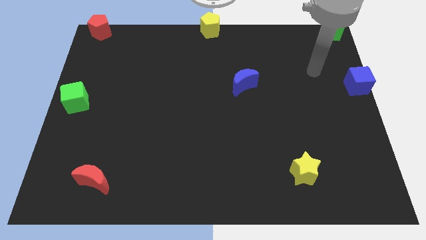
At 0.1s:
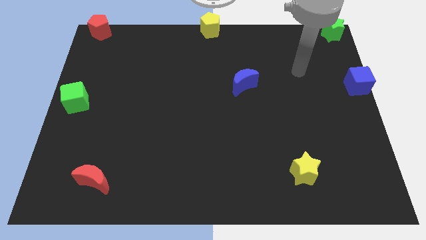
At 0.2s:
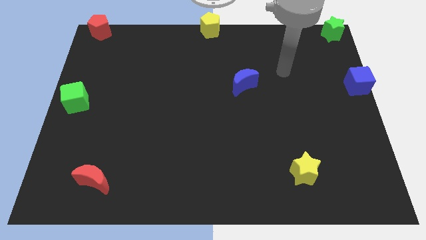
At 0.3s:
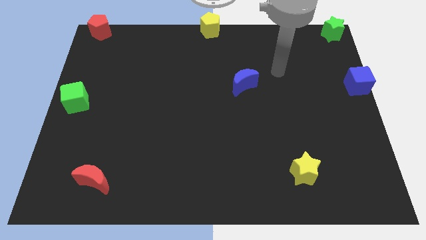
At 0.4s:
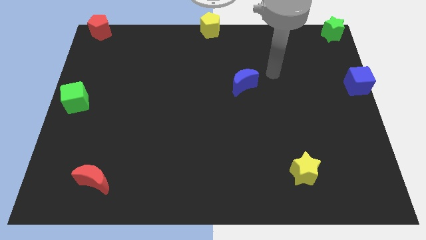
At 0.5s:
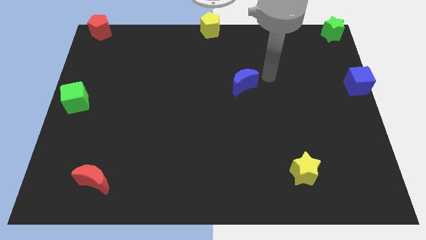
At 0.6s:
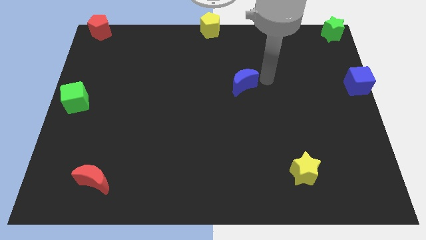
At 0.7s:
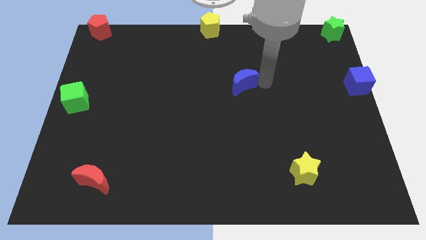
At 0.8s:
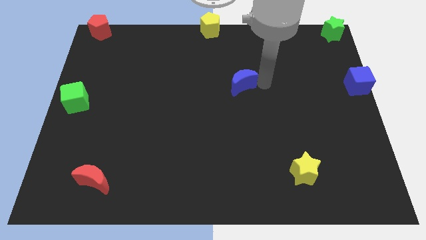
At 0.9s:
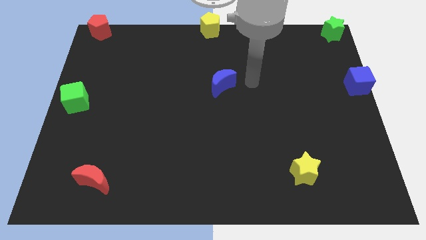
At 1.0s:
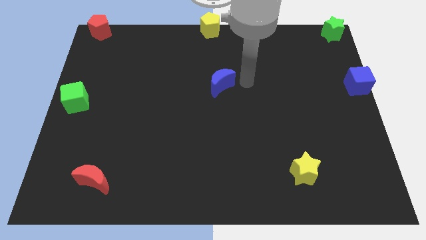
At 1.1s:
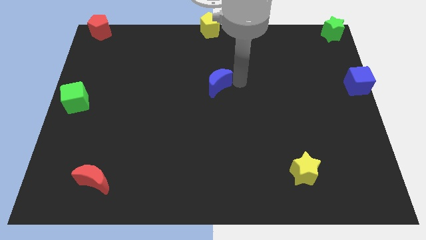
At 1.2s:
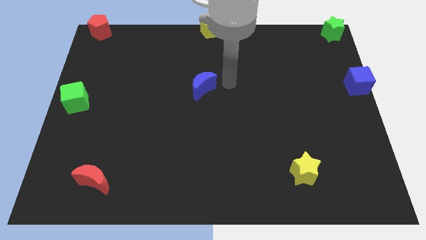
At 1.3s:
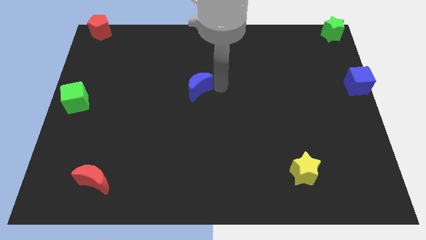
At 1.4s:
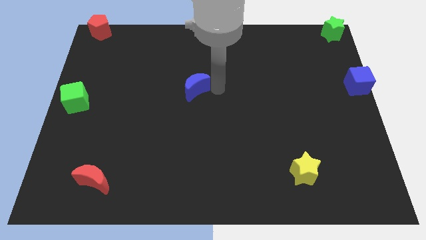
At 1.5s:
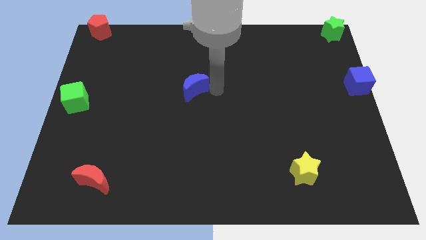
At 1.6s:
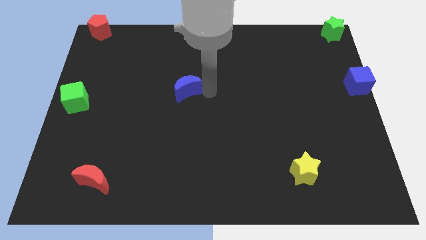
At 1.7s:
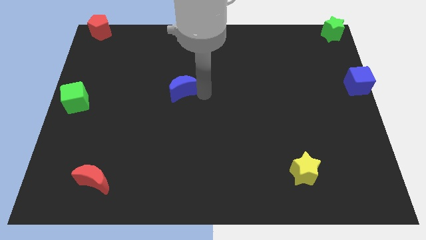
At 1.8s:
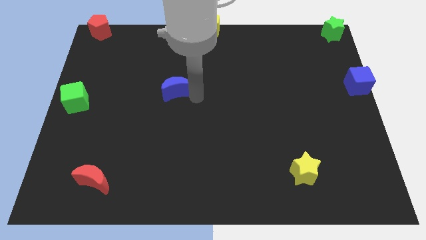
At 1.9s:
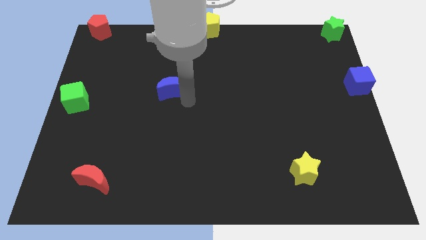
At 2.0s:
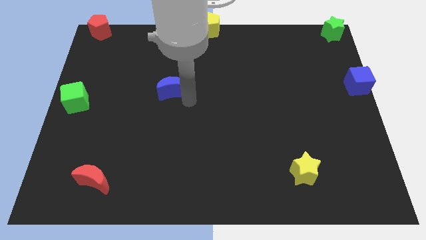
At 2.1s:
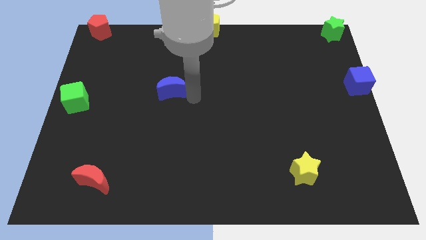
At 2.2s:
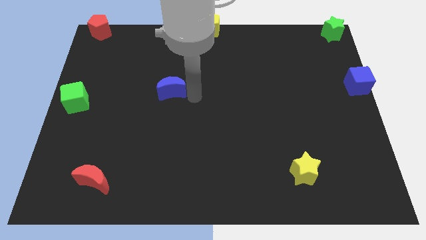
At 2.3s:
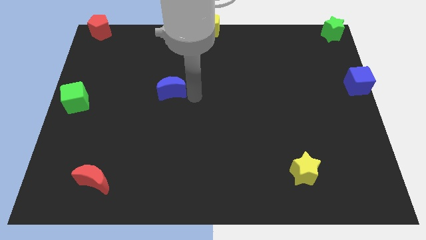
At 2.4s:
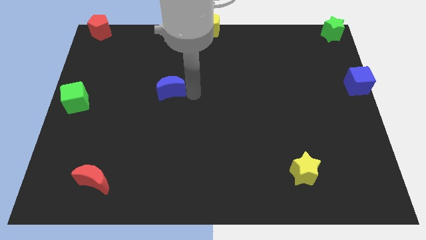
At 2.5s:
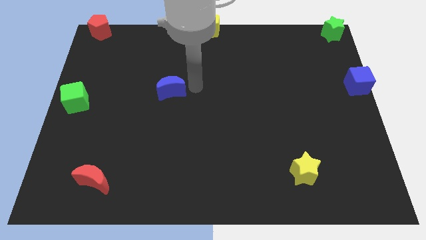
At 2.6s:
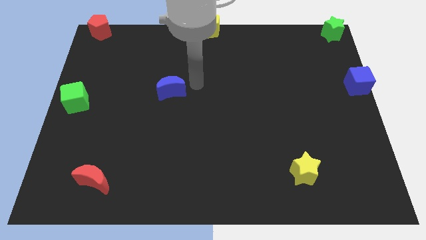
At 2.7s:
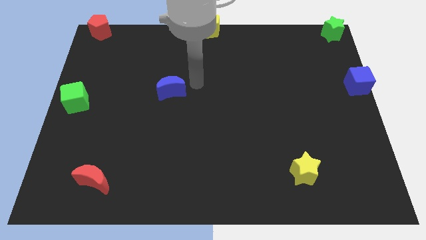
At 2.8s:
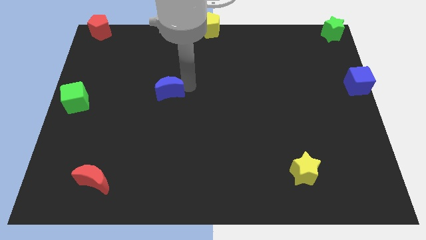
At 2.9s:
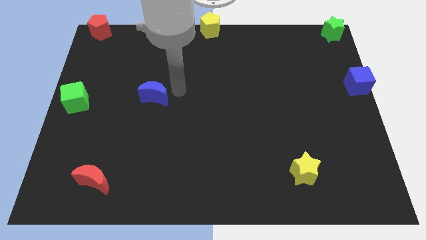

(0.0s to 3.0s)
push the blue crescent towards the left center of the board

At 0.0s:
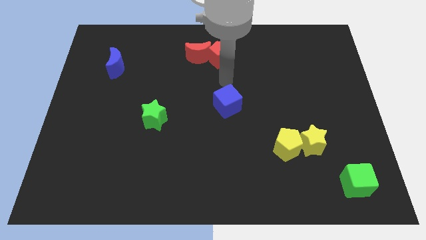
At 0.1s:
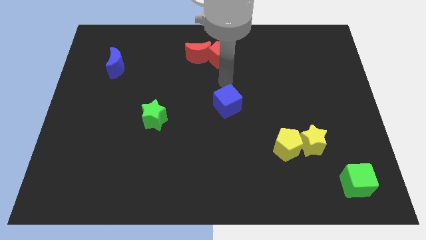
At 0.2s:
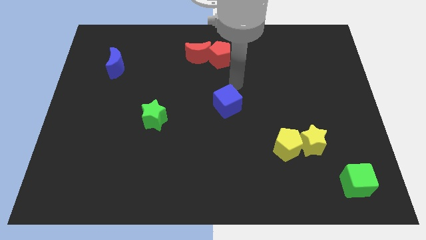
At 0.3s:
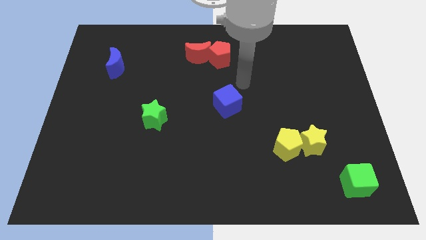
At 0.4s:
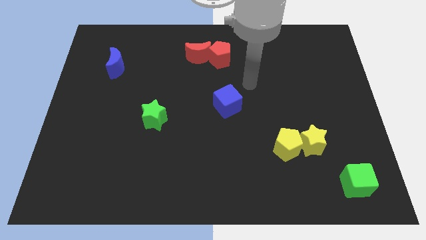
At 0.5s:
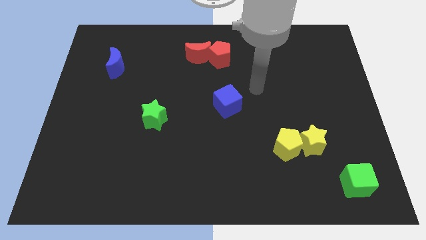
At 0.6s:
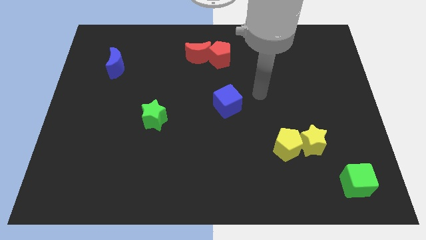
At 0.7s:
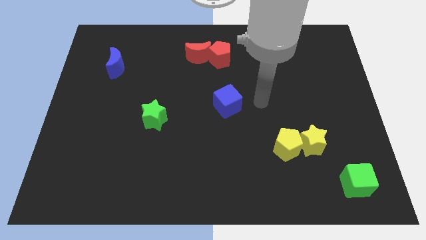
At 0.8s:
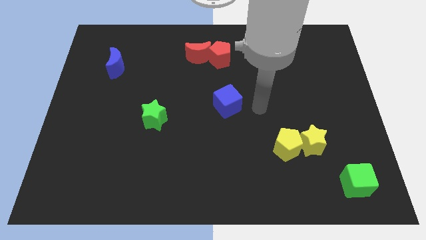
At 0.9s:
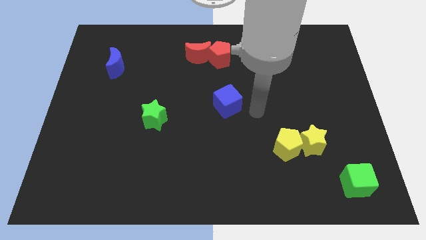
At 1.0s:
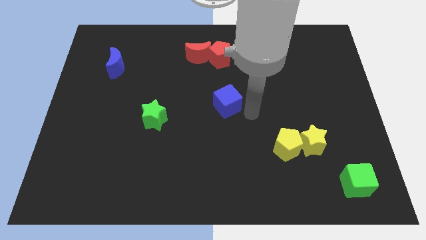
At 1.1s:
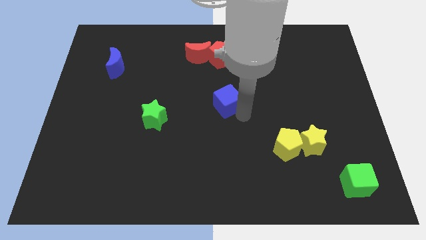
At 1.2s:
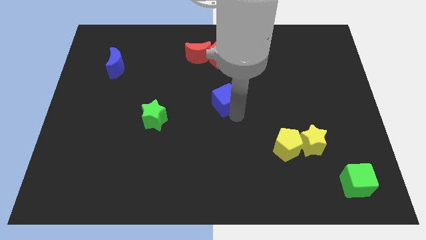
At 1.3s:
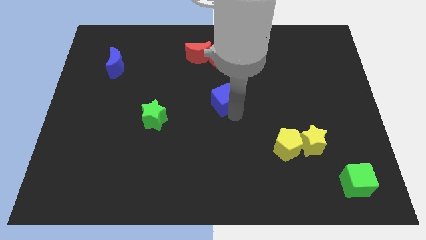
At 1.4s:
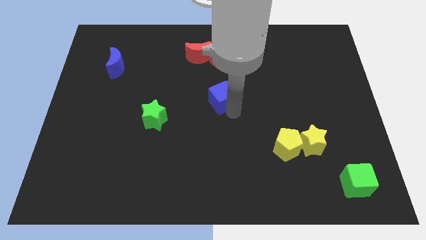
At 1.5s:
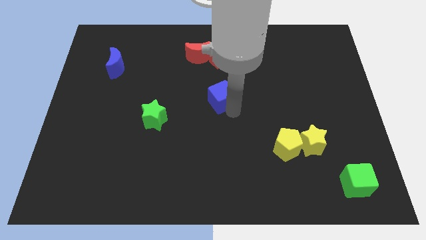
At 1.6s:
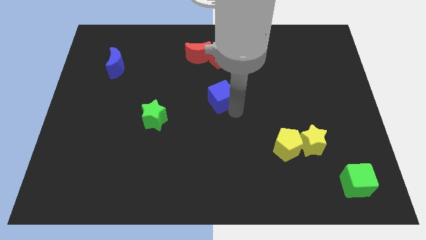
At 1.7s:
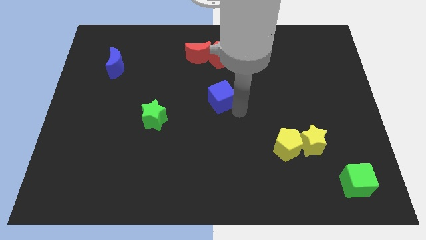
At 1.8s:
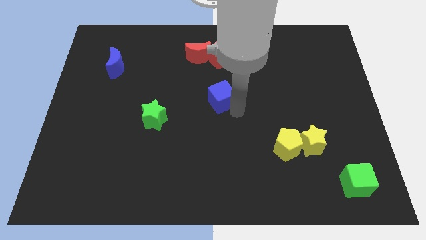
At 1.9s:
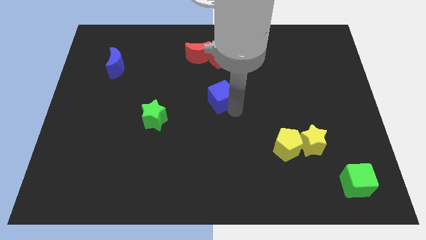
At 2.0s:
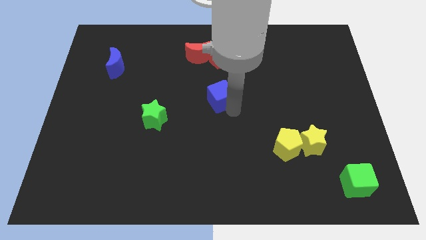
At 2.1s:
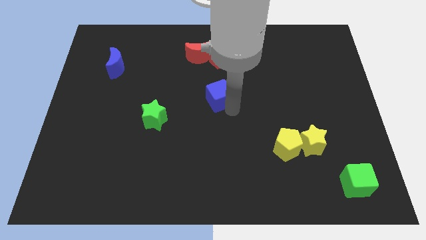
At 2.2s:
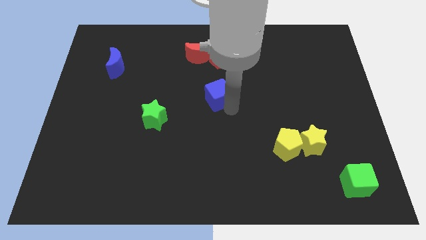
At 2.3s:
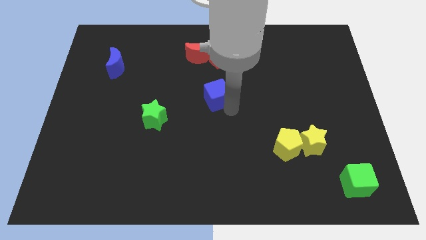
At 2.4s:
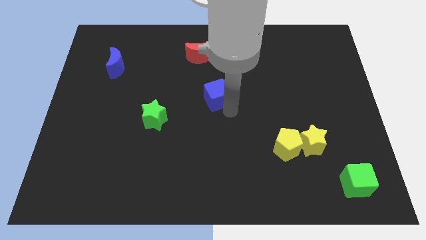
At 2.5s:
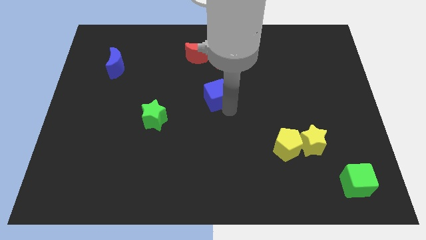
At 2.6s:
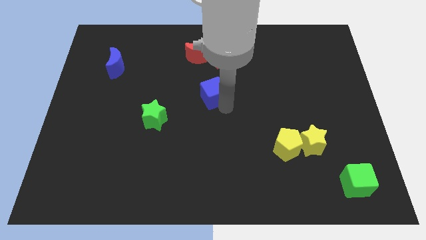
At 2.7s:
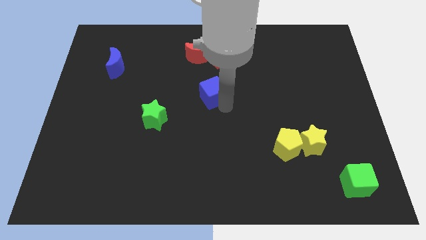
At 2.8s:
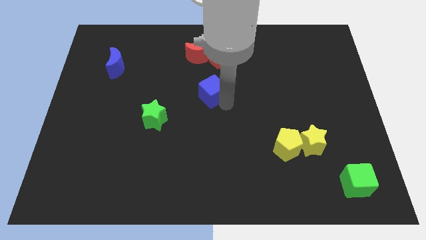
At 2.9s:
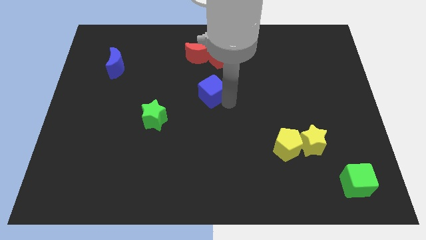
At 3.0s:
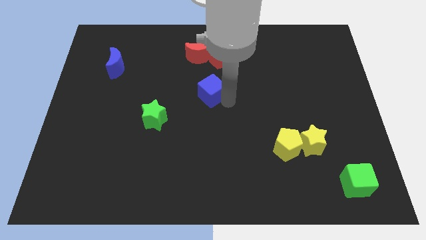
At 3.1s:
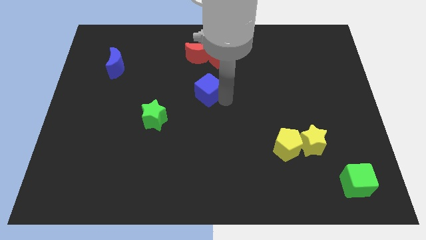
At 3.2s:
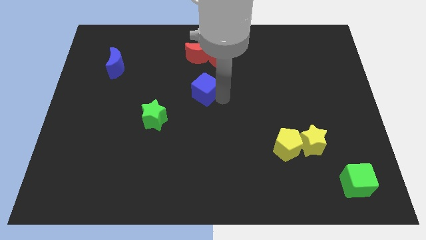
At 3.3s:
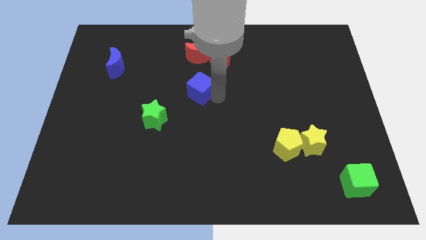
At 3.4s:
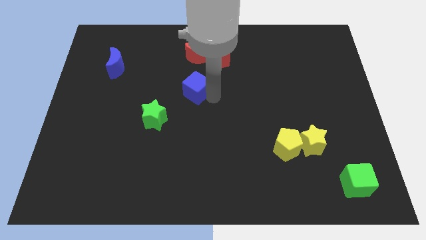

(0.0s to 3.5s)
place blue cube below the red blocks

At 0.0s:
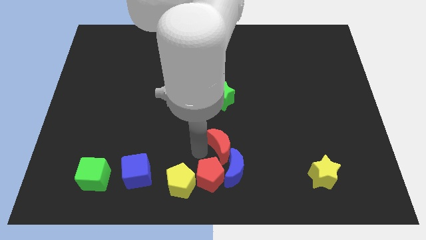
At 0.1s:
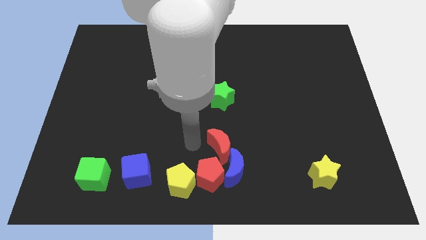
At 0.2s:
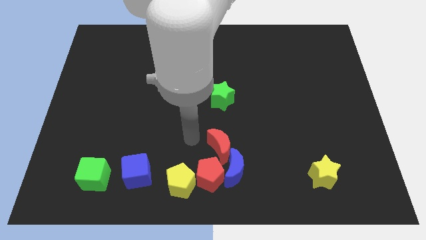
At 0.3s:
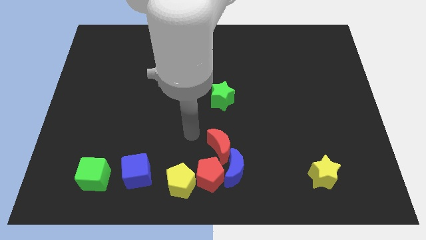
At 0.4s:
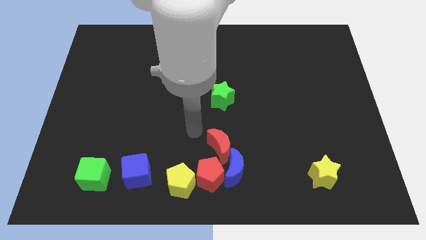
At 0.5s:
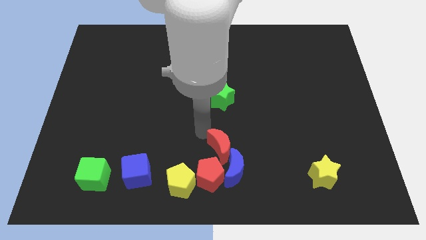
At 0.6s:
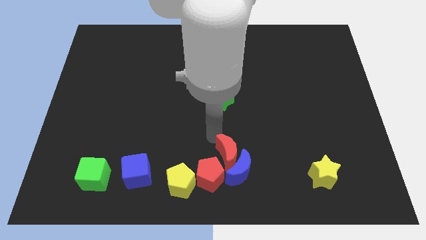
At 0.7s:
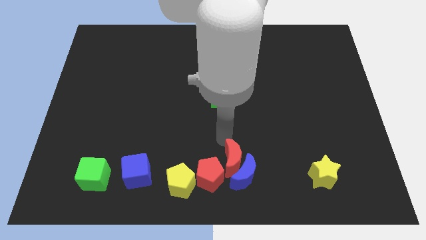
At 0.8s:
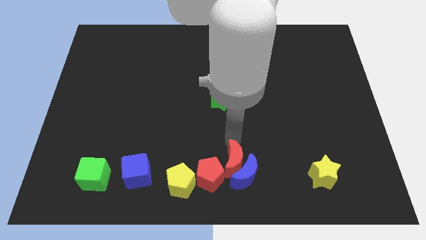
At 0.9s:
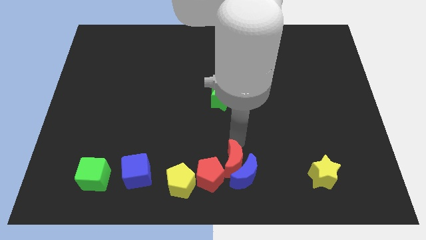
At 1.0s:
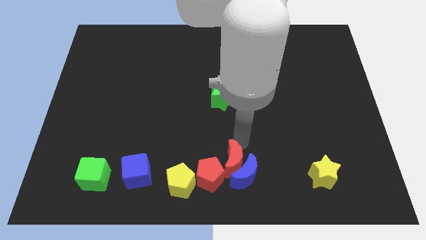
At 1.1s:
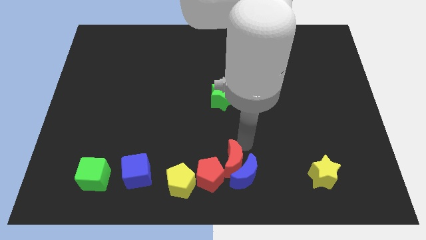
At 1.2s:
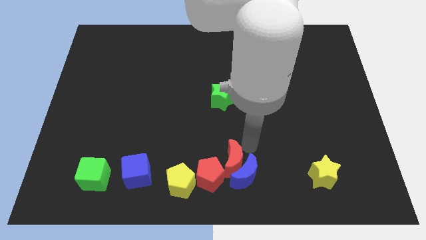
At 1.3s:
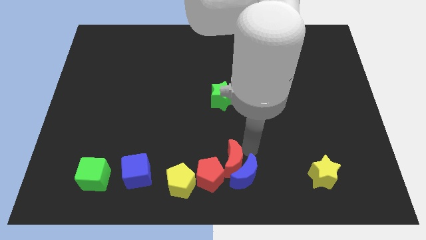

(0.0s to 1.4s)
tap at the top side of the red crescent

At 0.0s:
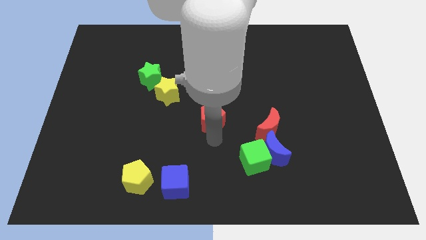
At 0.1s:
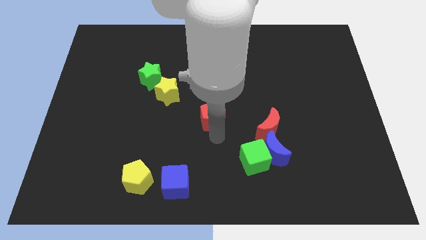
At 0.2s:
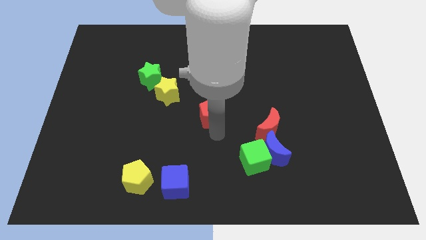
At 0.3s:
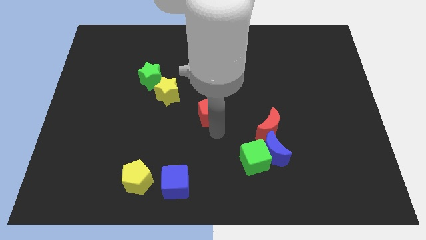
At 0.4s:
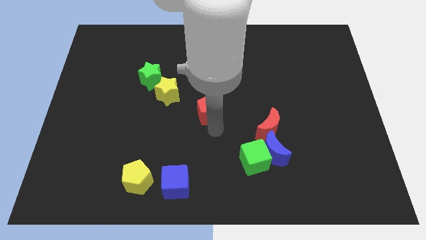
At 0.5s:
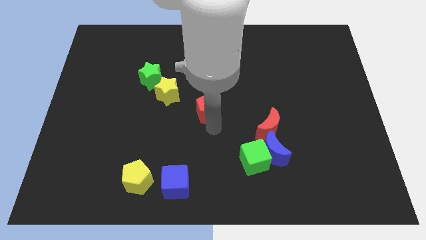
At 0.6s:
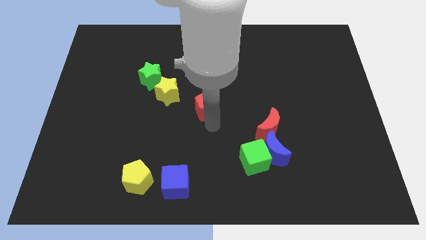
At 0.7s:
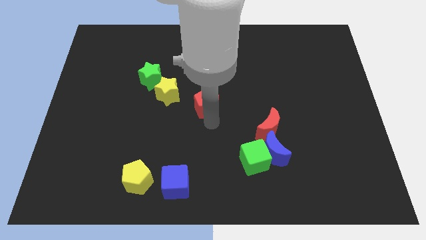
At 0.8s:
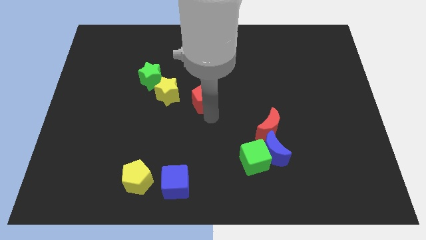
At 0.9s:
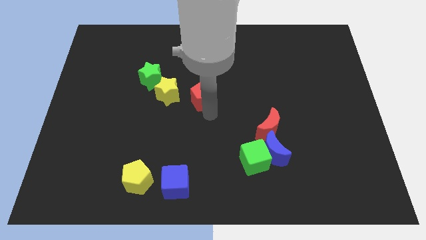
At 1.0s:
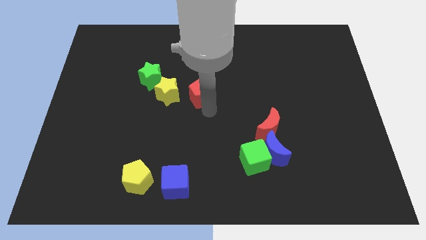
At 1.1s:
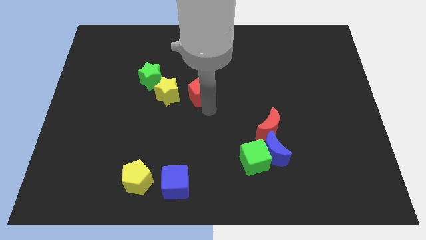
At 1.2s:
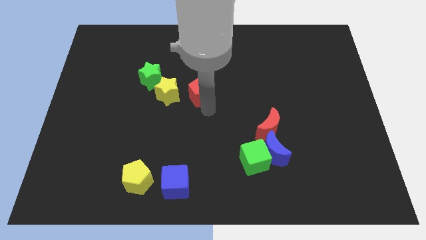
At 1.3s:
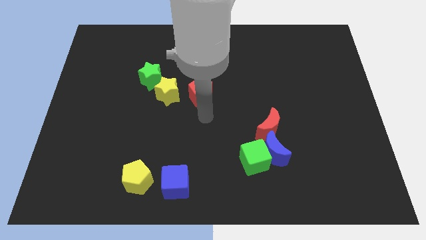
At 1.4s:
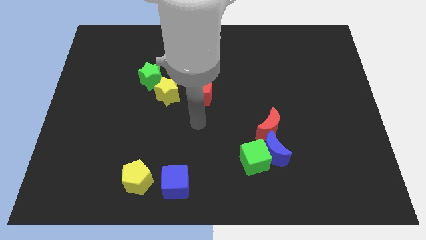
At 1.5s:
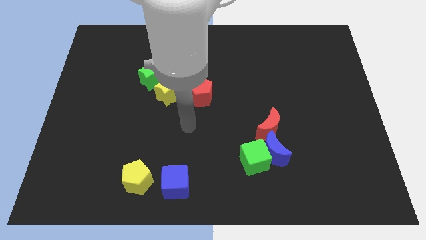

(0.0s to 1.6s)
place the red pentagon right to the yellow star
